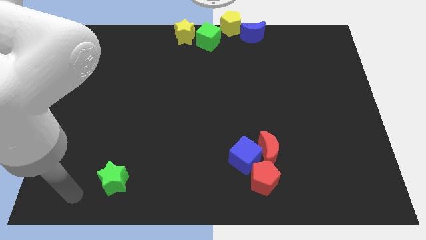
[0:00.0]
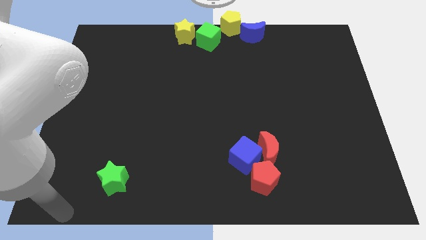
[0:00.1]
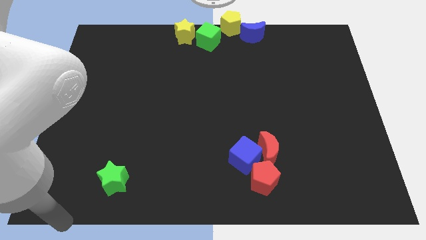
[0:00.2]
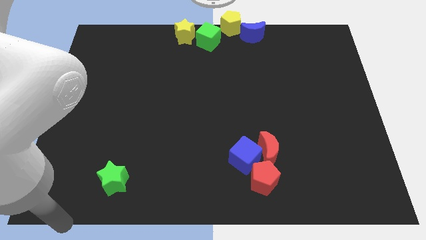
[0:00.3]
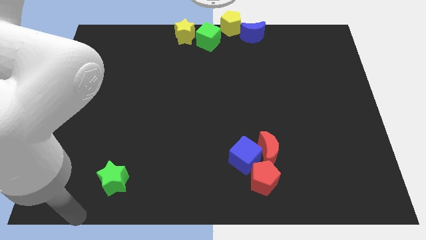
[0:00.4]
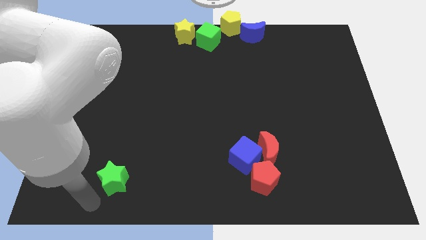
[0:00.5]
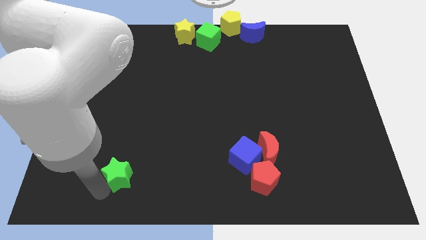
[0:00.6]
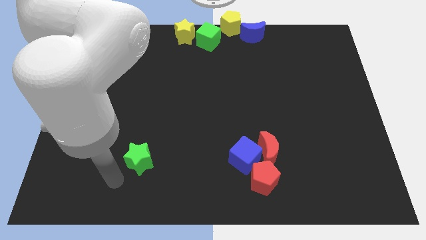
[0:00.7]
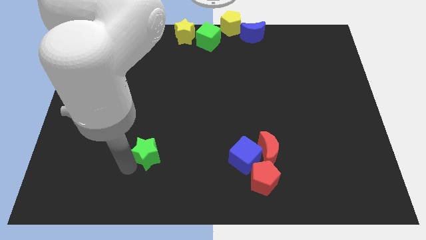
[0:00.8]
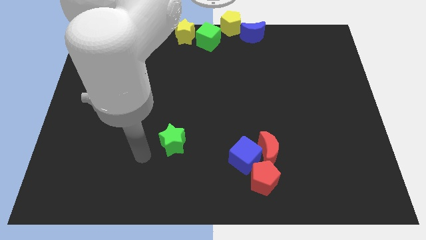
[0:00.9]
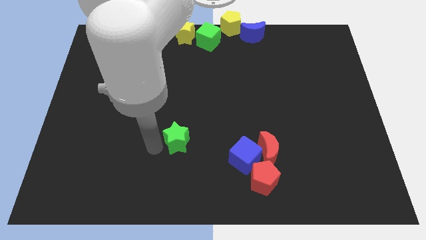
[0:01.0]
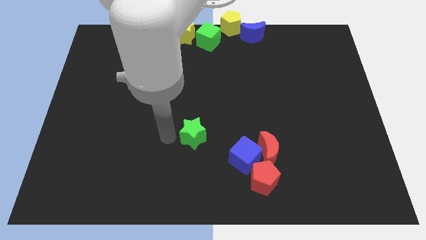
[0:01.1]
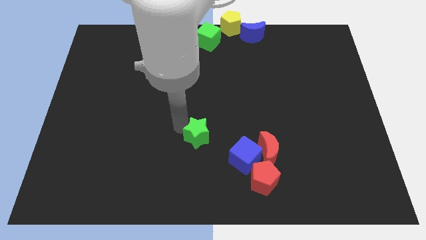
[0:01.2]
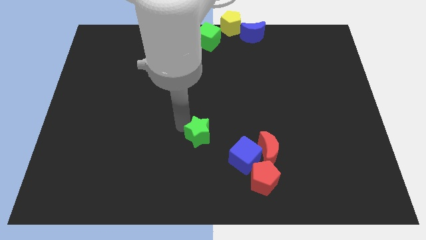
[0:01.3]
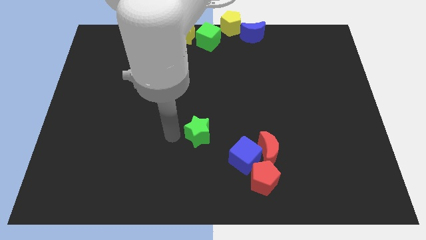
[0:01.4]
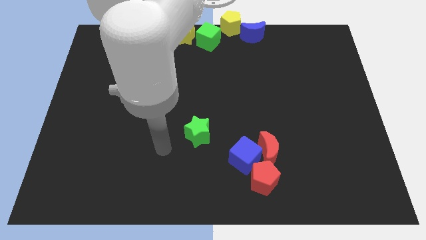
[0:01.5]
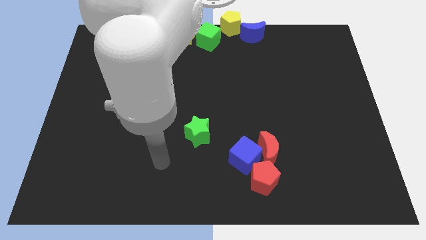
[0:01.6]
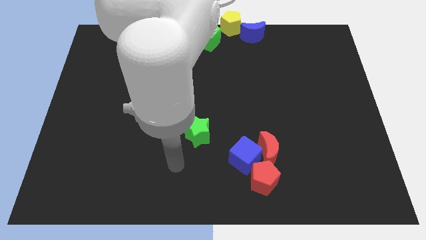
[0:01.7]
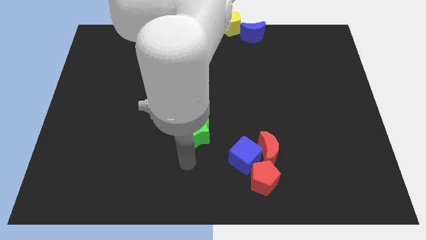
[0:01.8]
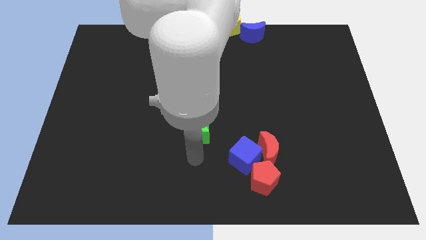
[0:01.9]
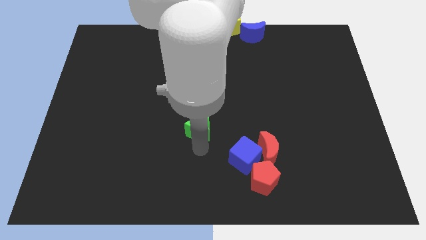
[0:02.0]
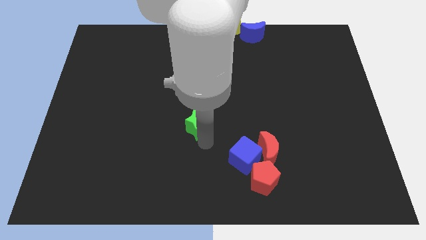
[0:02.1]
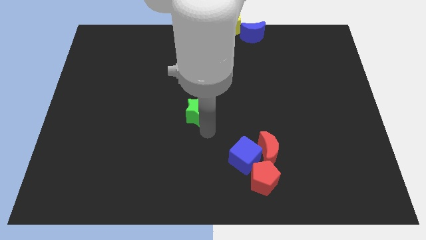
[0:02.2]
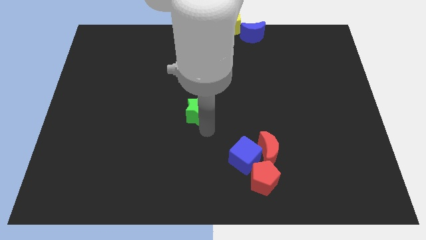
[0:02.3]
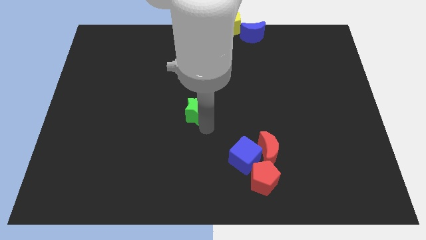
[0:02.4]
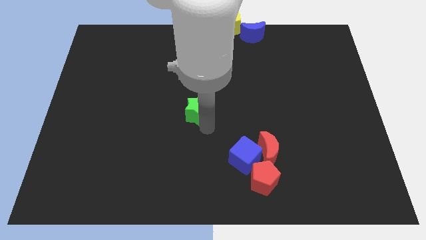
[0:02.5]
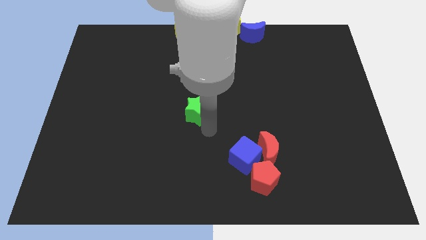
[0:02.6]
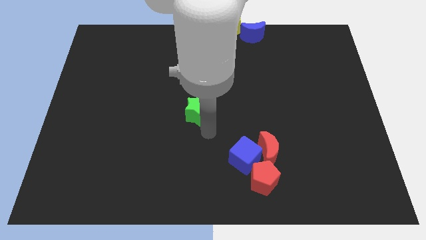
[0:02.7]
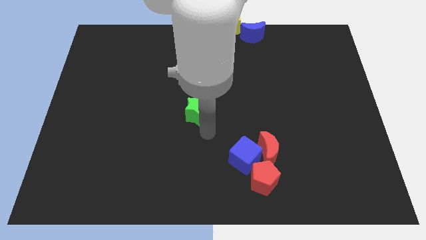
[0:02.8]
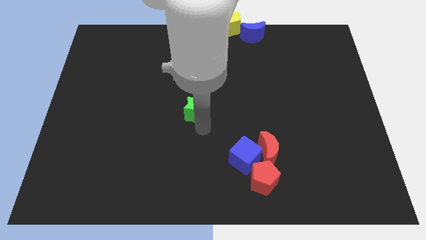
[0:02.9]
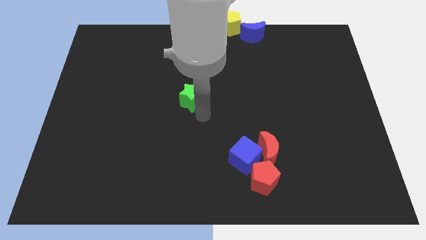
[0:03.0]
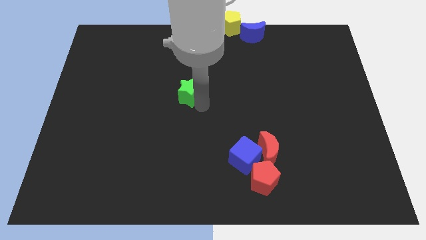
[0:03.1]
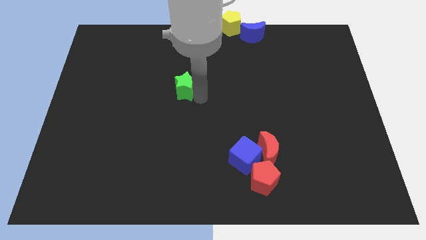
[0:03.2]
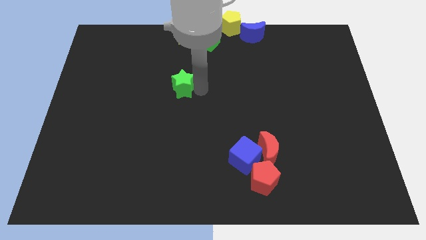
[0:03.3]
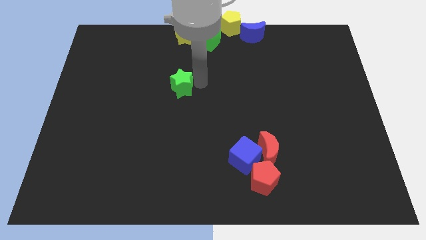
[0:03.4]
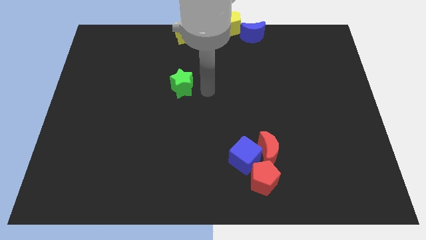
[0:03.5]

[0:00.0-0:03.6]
place the green star to the bottom side of the yellow star

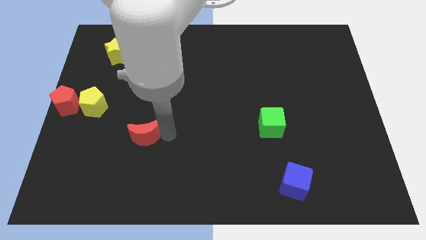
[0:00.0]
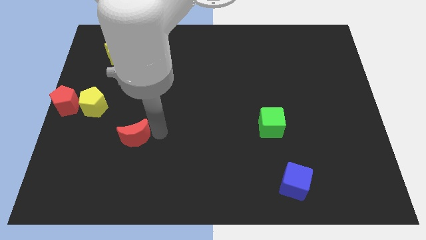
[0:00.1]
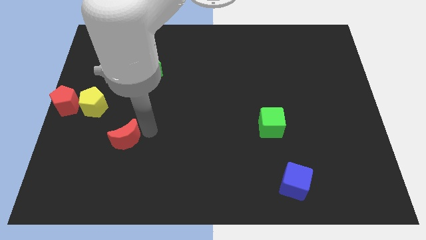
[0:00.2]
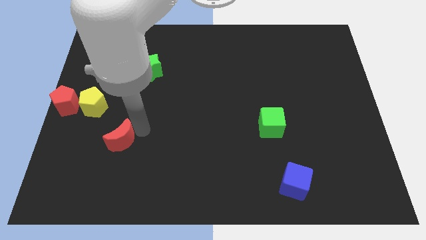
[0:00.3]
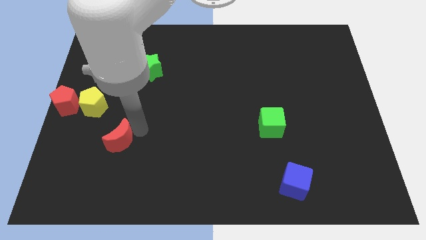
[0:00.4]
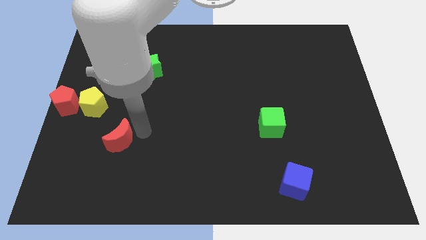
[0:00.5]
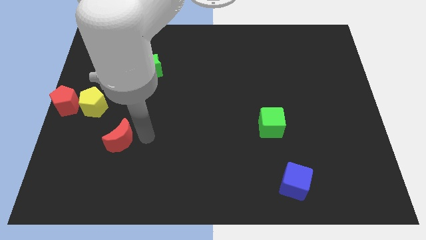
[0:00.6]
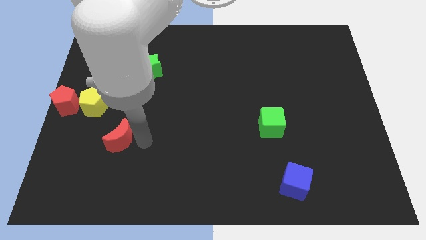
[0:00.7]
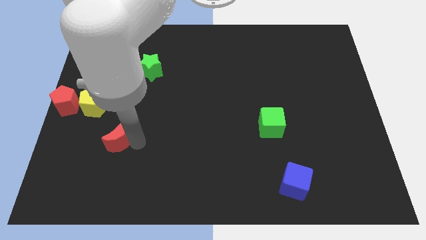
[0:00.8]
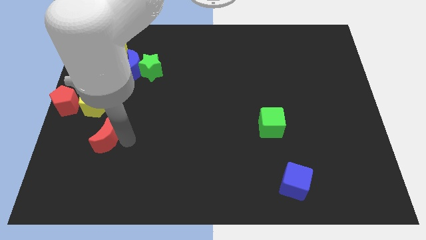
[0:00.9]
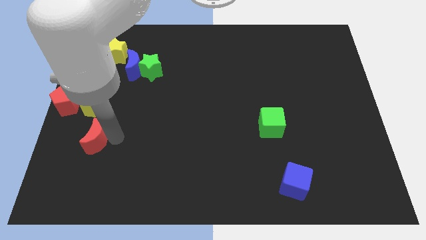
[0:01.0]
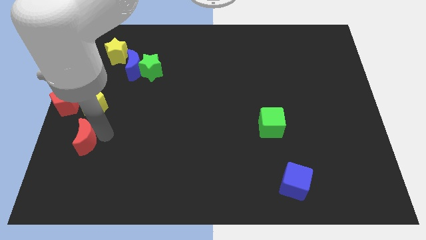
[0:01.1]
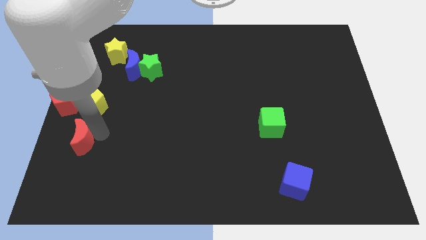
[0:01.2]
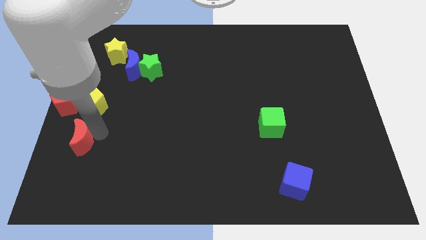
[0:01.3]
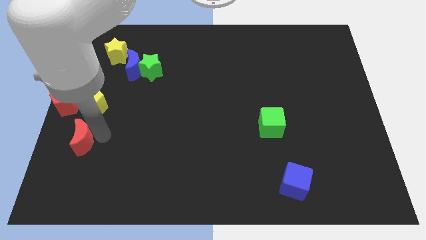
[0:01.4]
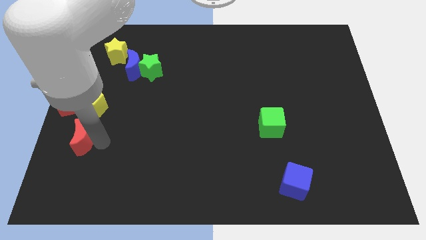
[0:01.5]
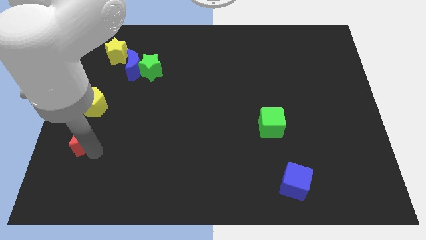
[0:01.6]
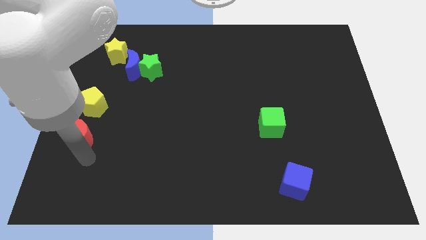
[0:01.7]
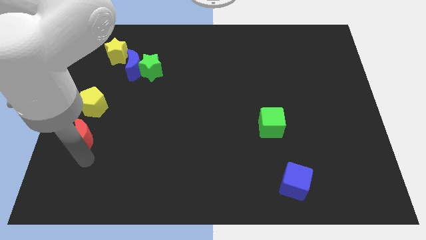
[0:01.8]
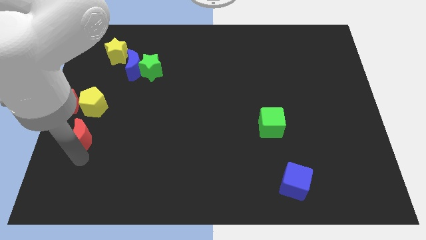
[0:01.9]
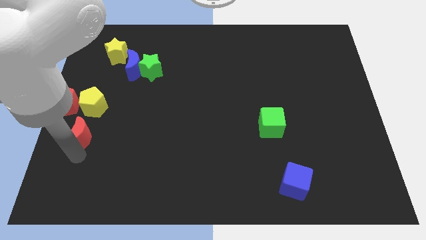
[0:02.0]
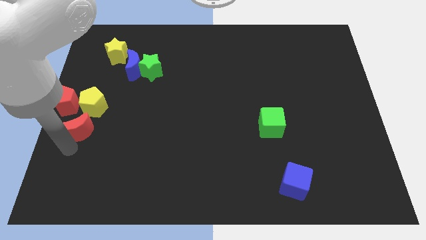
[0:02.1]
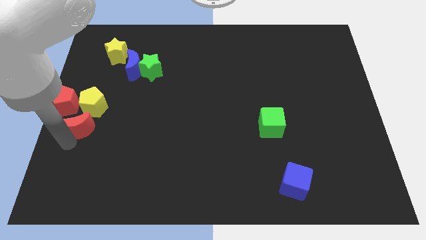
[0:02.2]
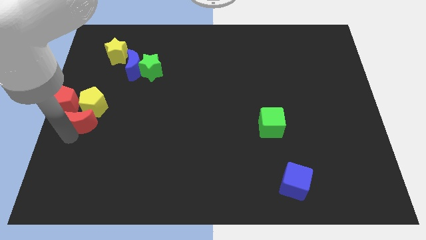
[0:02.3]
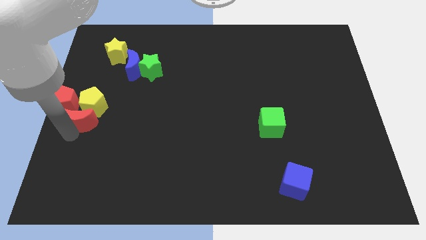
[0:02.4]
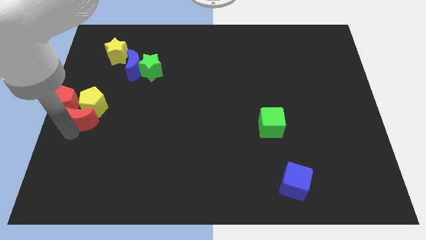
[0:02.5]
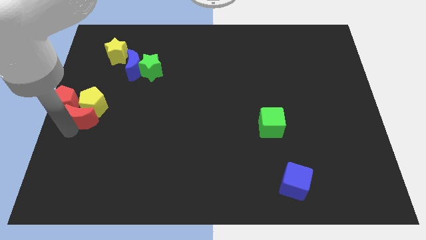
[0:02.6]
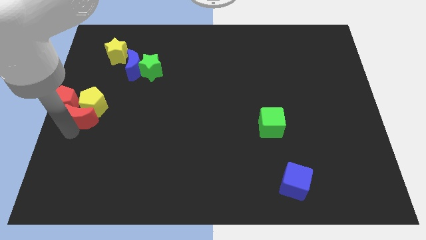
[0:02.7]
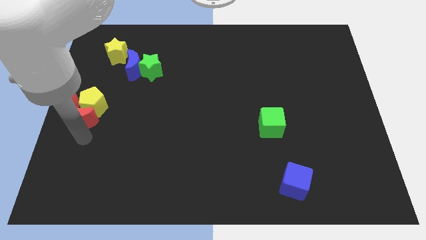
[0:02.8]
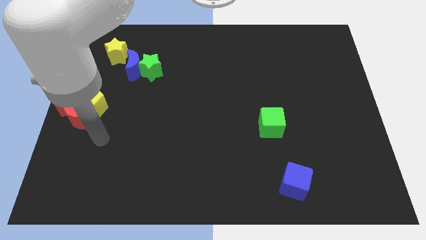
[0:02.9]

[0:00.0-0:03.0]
push the red crescent into the bottom side of the red and yellow pentagons

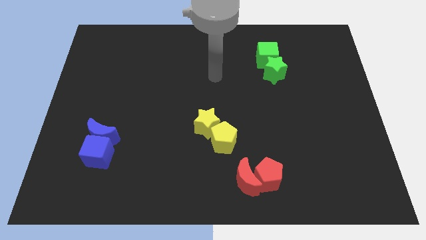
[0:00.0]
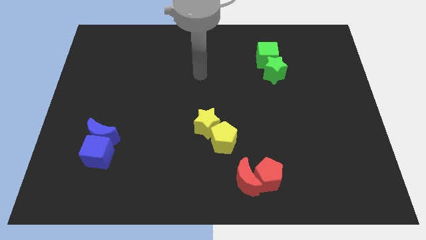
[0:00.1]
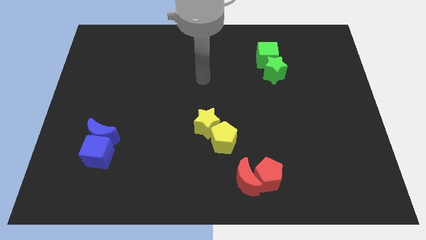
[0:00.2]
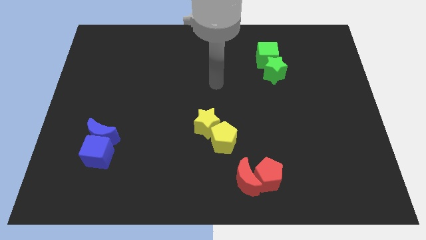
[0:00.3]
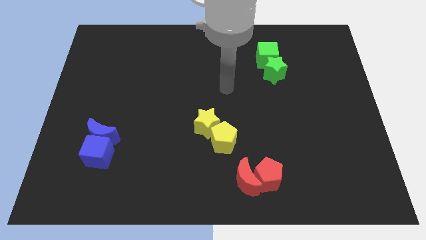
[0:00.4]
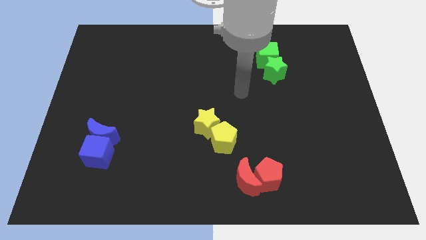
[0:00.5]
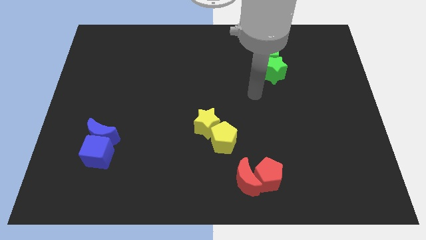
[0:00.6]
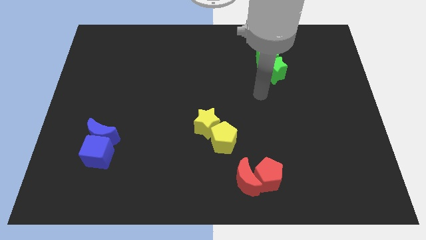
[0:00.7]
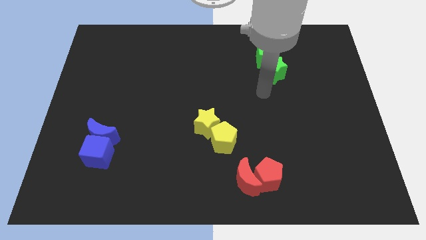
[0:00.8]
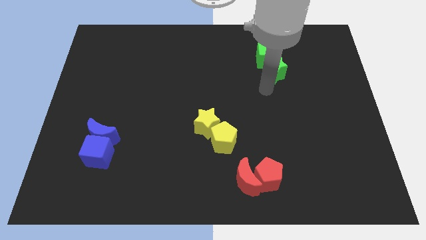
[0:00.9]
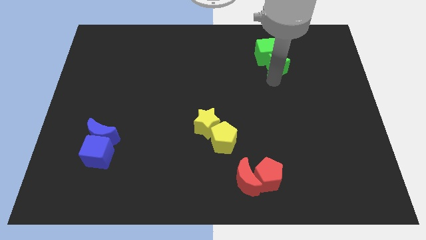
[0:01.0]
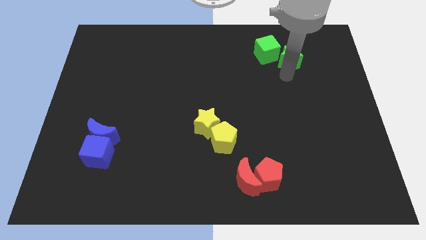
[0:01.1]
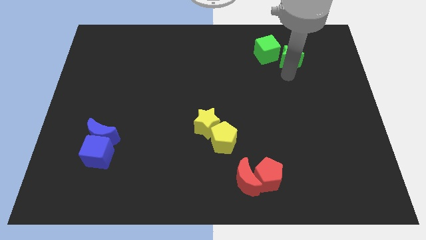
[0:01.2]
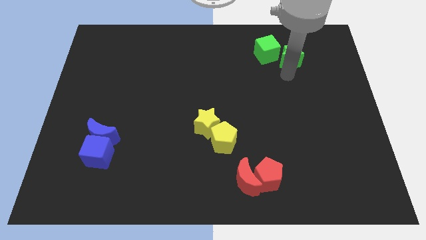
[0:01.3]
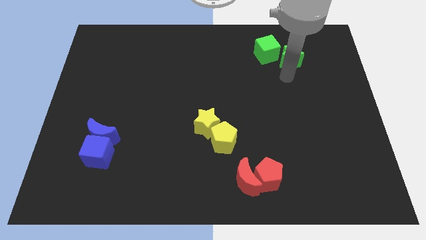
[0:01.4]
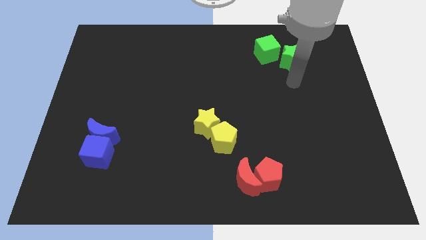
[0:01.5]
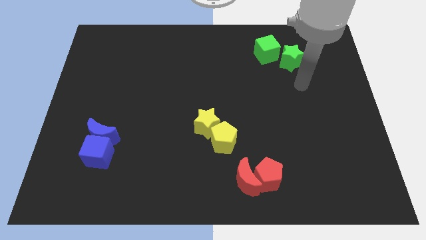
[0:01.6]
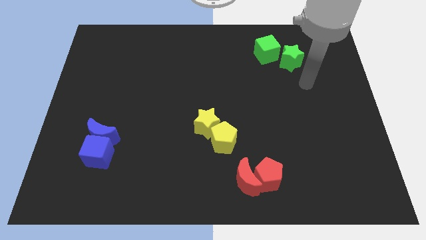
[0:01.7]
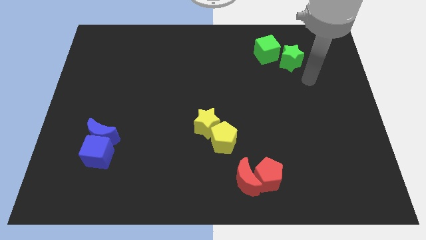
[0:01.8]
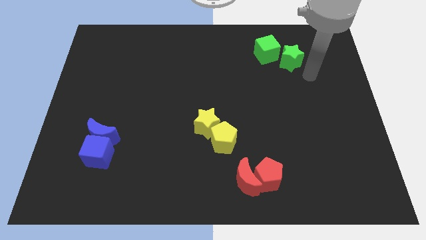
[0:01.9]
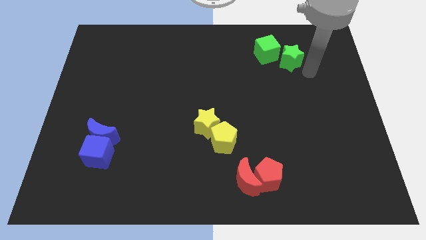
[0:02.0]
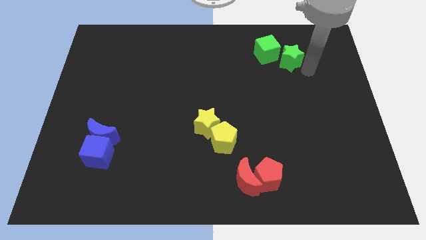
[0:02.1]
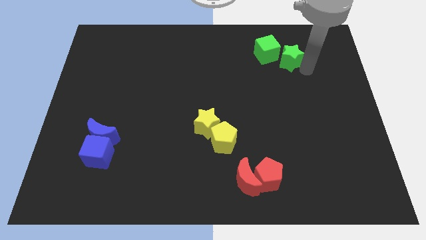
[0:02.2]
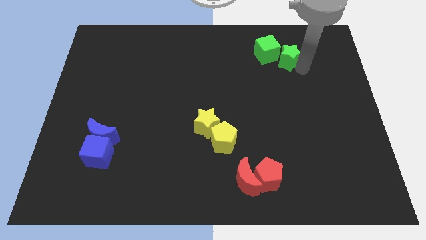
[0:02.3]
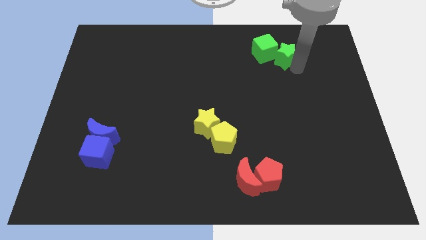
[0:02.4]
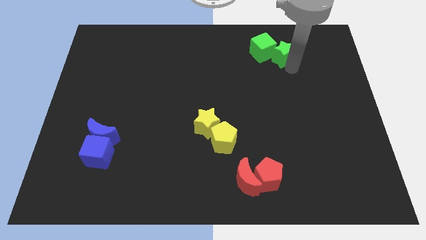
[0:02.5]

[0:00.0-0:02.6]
place the green star diagonally right to the green cube
